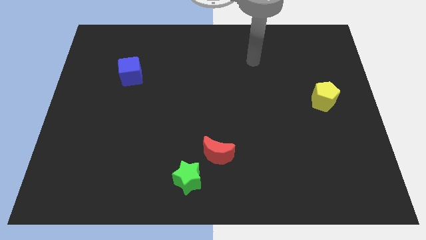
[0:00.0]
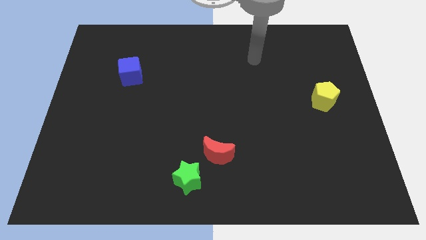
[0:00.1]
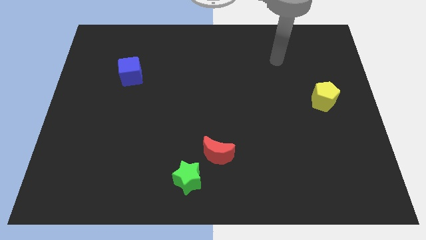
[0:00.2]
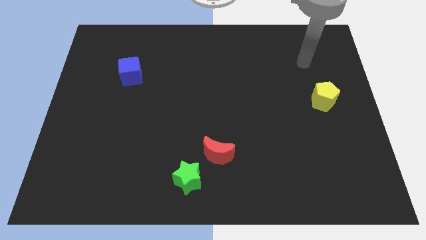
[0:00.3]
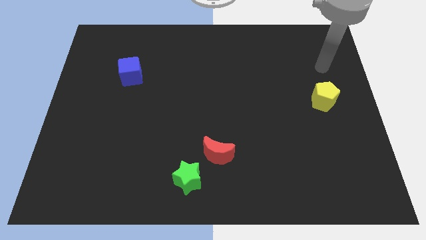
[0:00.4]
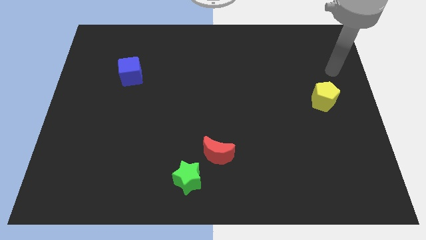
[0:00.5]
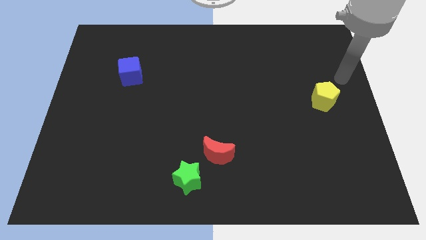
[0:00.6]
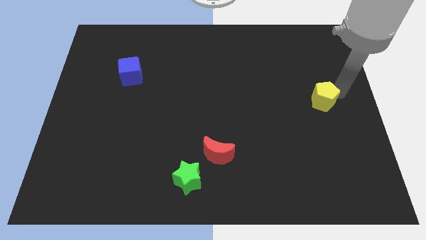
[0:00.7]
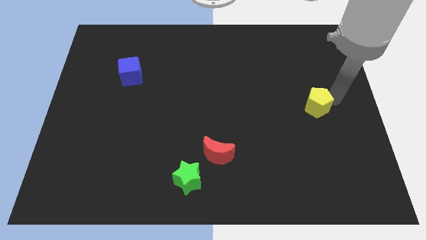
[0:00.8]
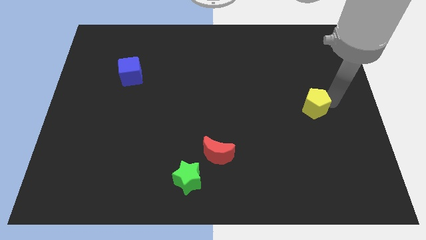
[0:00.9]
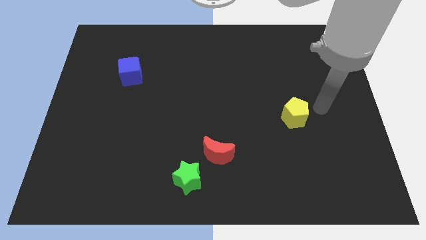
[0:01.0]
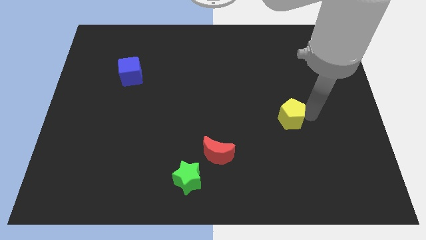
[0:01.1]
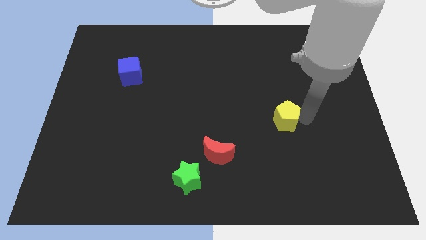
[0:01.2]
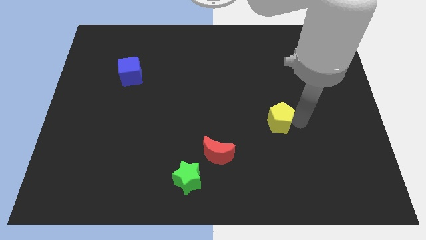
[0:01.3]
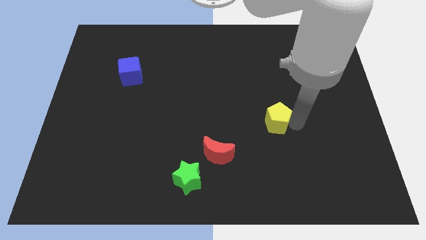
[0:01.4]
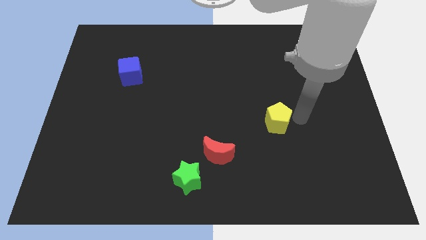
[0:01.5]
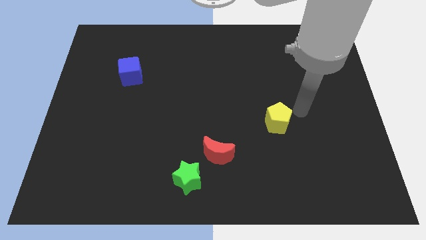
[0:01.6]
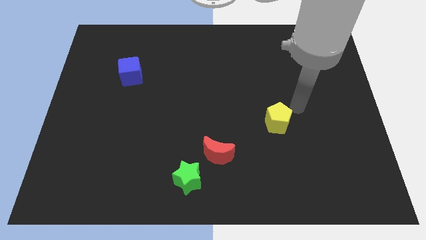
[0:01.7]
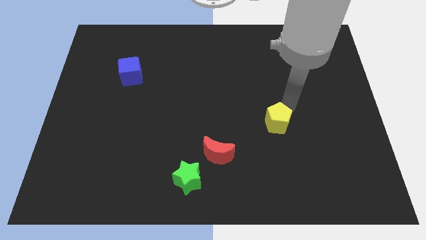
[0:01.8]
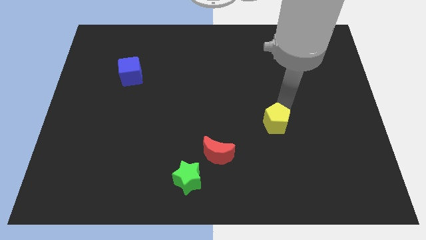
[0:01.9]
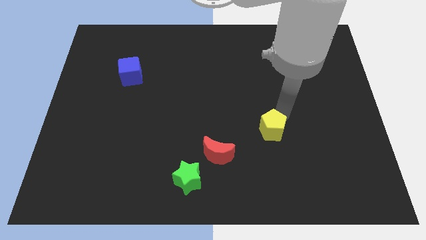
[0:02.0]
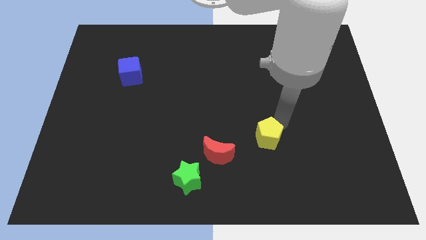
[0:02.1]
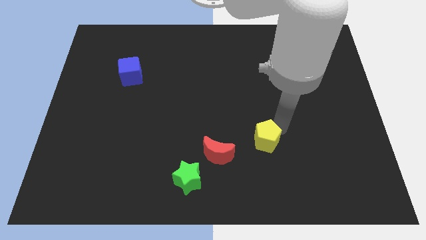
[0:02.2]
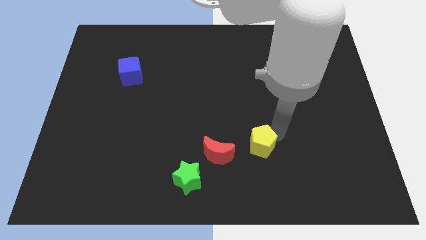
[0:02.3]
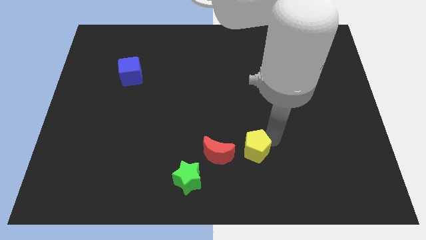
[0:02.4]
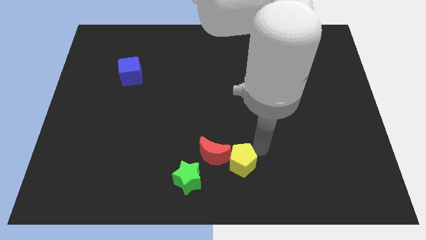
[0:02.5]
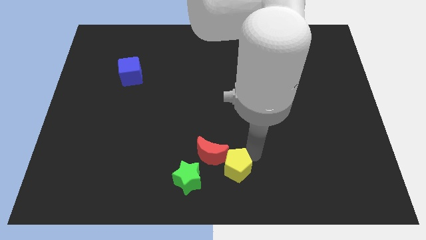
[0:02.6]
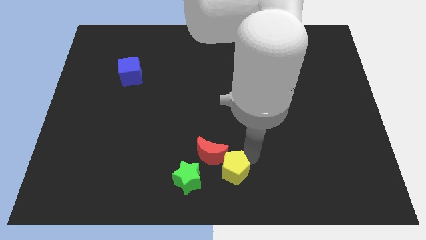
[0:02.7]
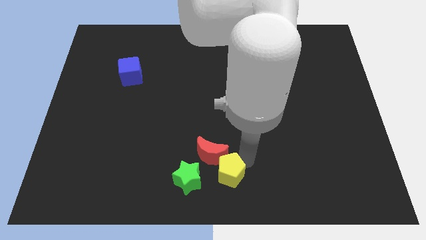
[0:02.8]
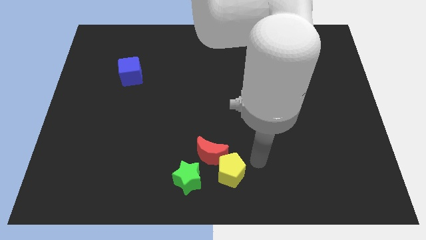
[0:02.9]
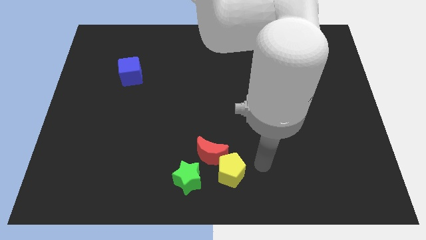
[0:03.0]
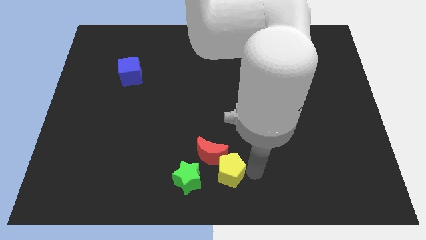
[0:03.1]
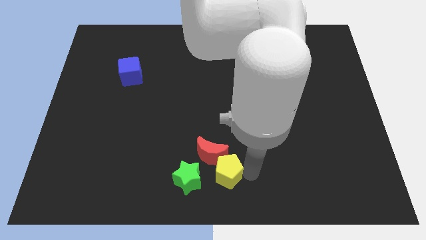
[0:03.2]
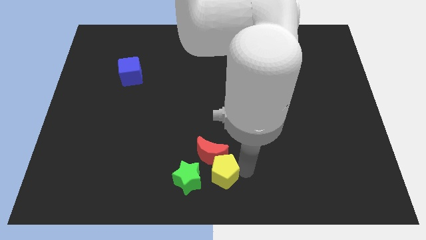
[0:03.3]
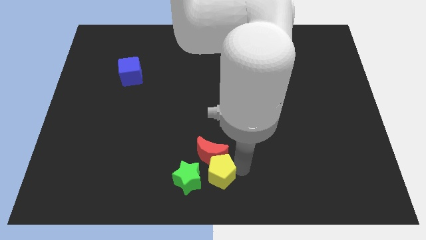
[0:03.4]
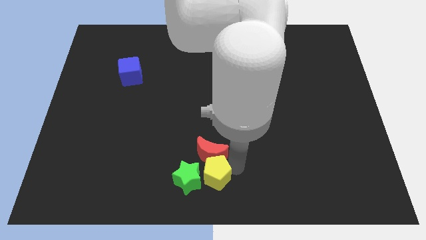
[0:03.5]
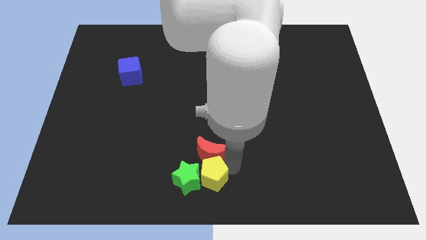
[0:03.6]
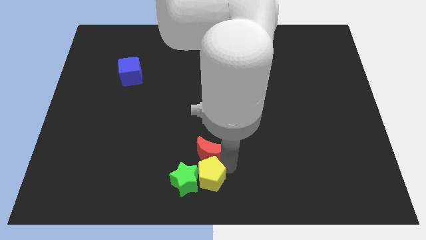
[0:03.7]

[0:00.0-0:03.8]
move the yellow pentagon towards the star

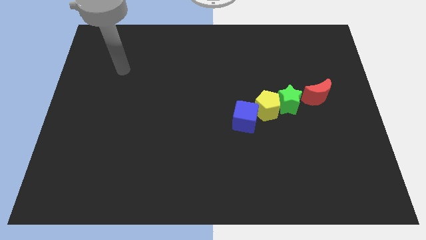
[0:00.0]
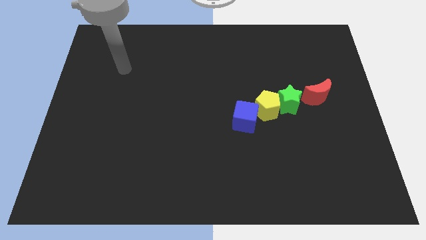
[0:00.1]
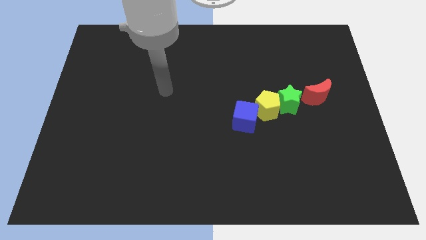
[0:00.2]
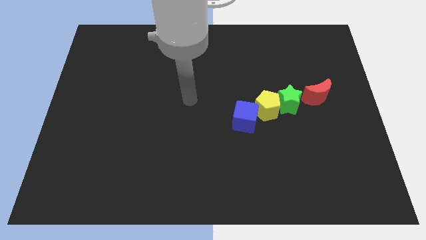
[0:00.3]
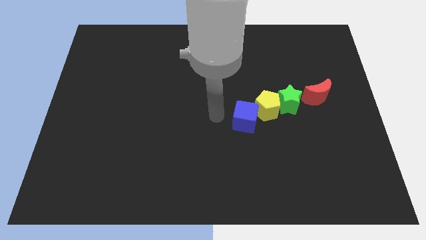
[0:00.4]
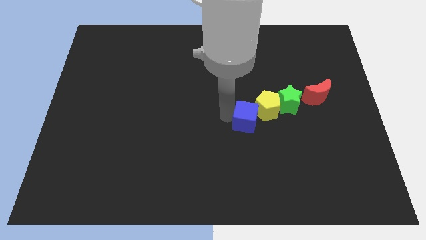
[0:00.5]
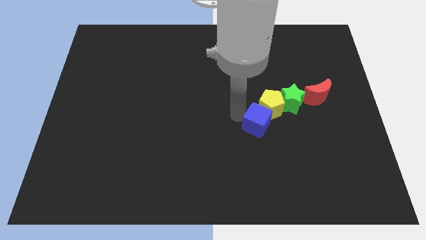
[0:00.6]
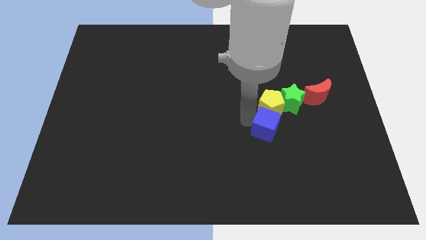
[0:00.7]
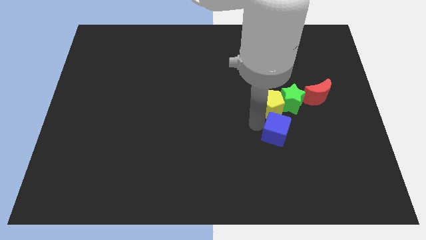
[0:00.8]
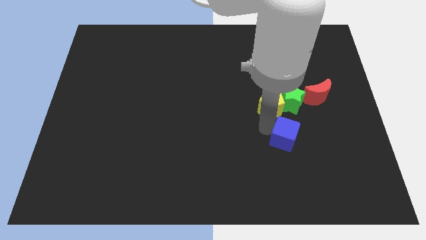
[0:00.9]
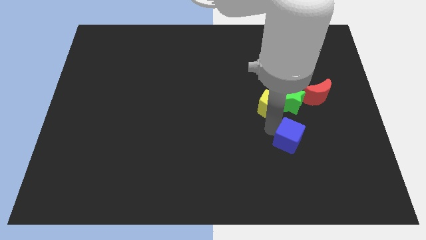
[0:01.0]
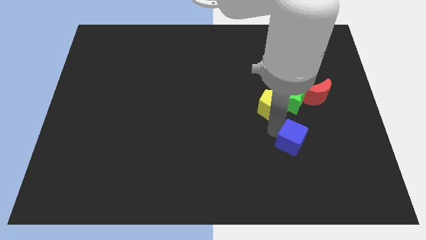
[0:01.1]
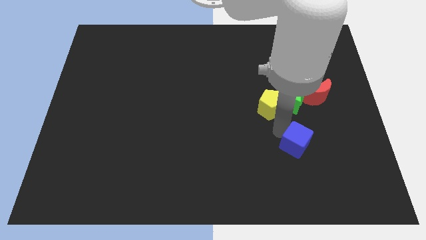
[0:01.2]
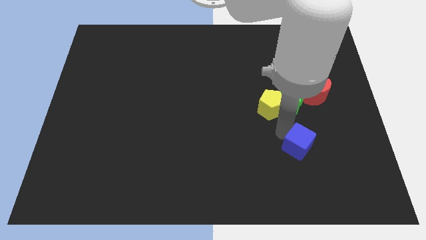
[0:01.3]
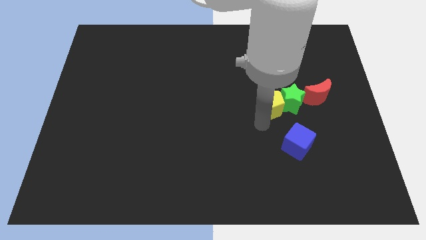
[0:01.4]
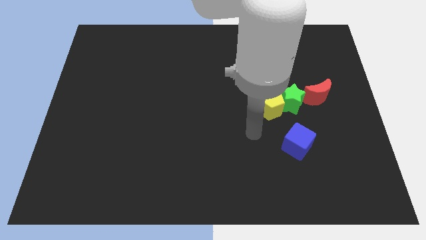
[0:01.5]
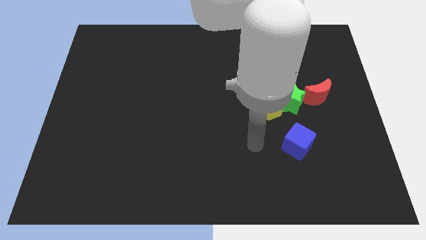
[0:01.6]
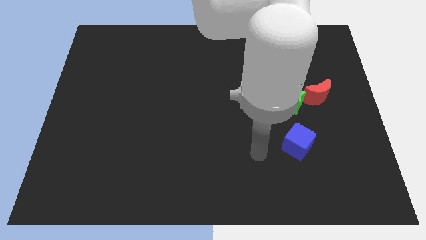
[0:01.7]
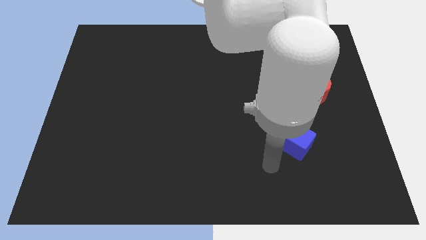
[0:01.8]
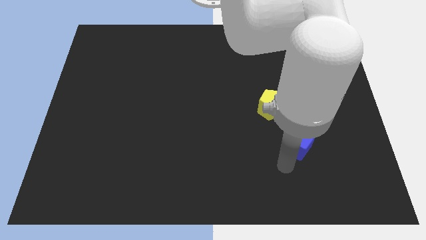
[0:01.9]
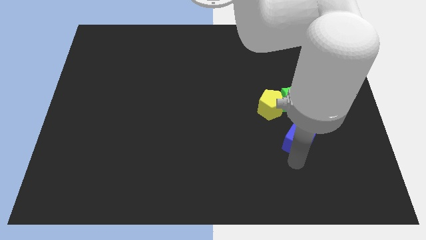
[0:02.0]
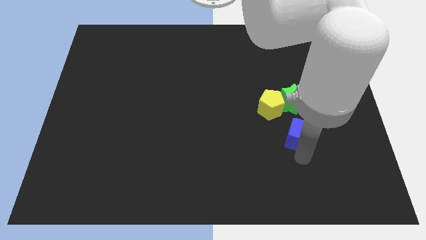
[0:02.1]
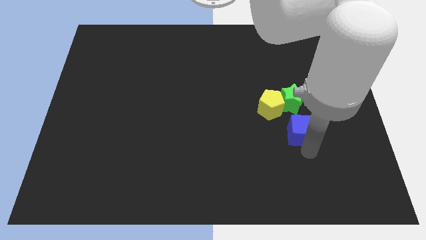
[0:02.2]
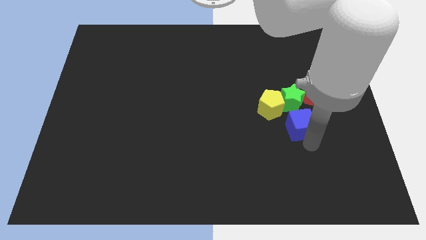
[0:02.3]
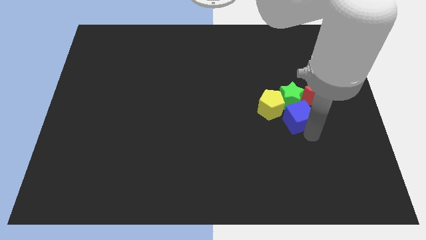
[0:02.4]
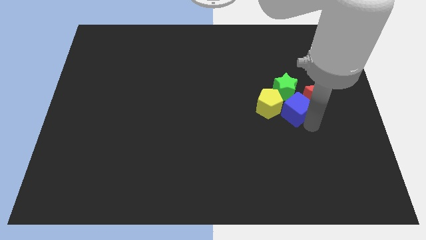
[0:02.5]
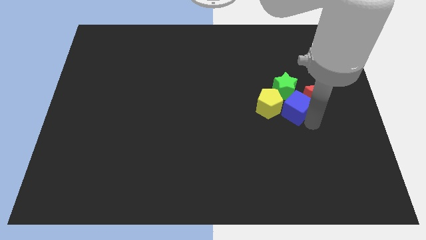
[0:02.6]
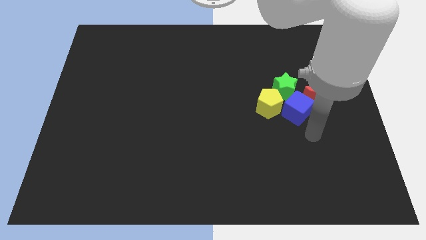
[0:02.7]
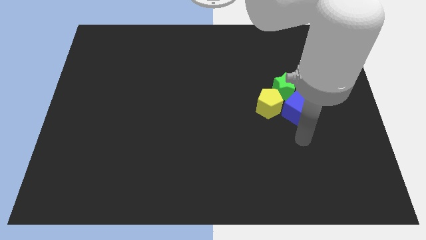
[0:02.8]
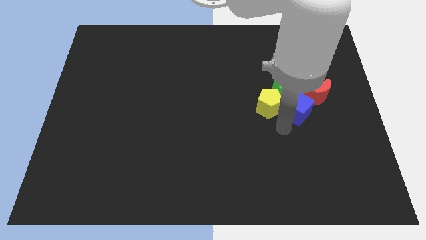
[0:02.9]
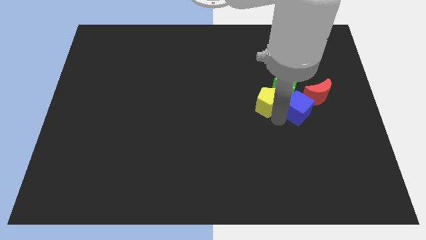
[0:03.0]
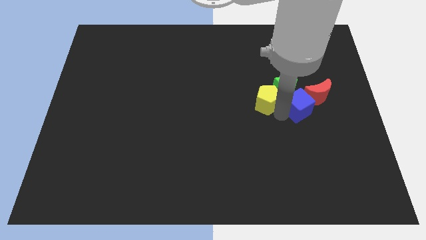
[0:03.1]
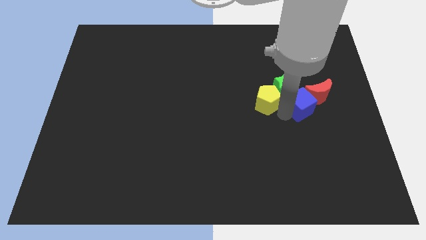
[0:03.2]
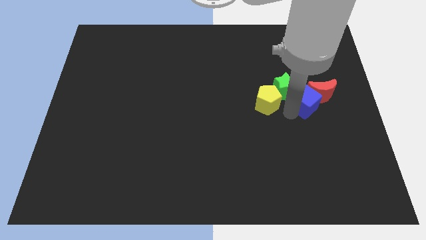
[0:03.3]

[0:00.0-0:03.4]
put the cube next to the red moon

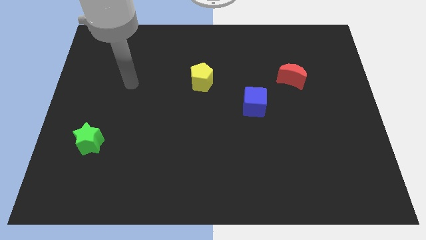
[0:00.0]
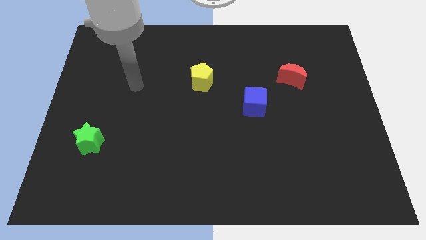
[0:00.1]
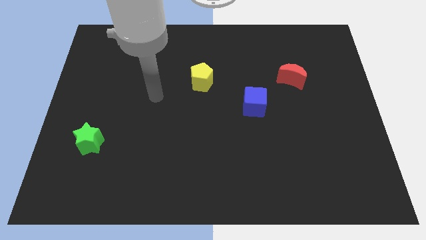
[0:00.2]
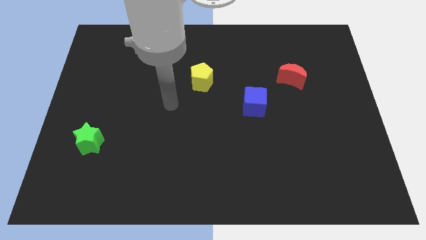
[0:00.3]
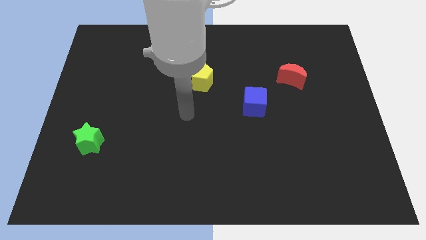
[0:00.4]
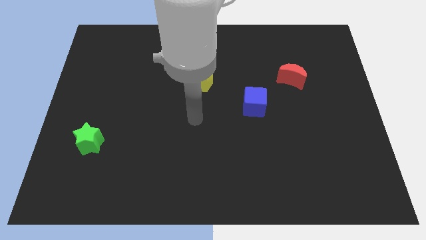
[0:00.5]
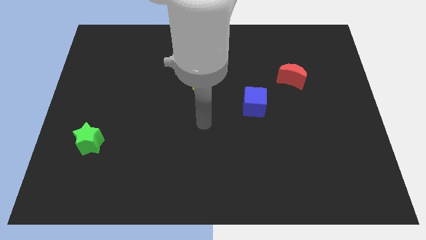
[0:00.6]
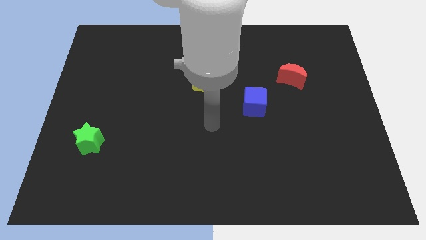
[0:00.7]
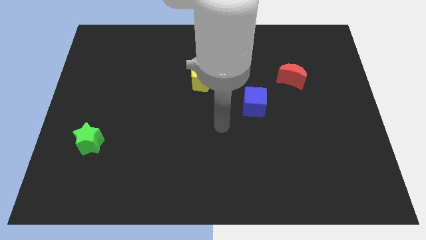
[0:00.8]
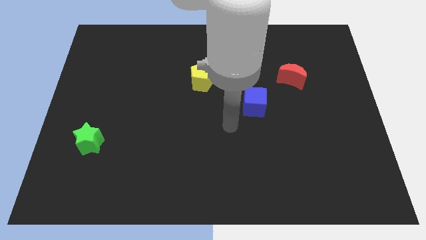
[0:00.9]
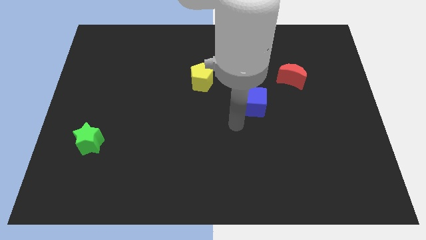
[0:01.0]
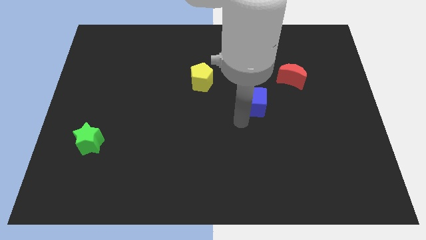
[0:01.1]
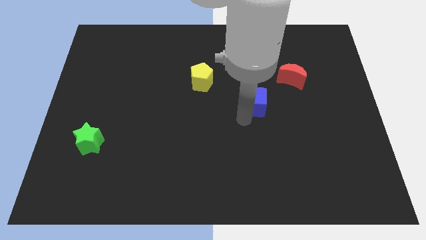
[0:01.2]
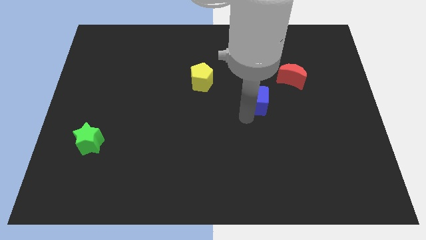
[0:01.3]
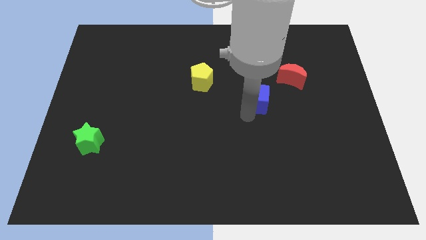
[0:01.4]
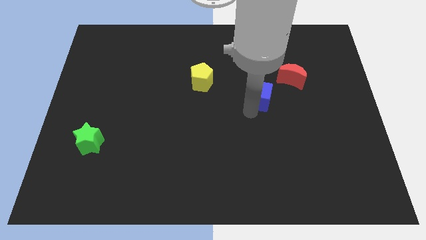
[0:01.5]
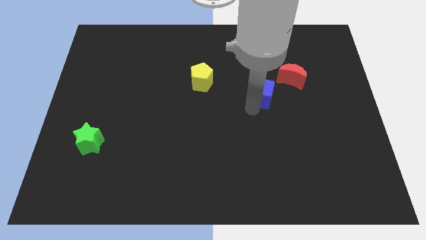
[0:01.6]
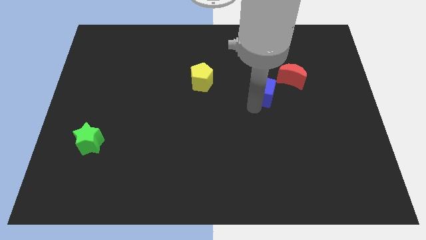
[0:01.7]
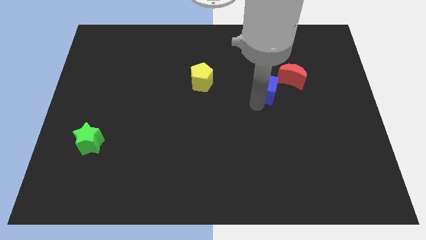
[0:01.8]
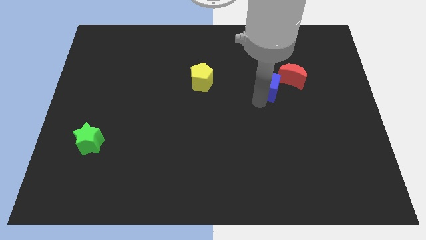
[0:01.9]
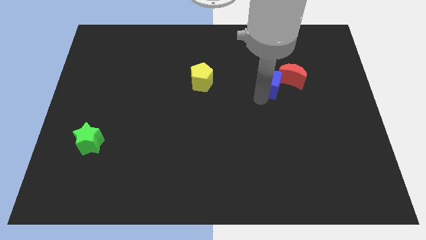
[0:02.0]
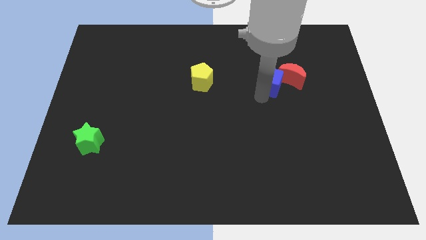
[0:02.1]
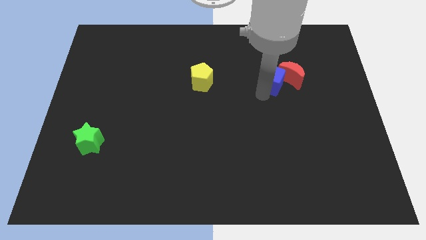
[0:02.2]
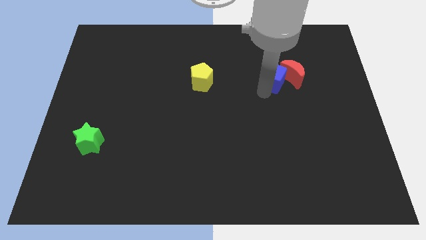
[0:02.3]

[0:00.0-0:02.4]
put the cube towards the red block
